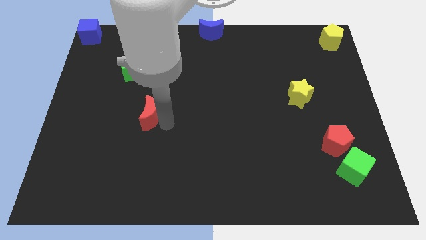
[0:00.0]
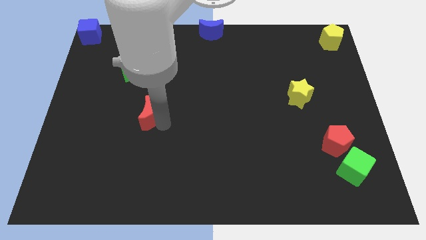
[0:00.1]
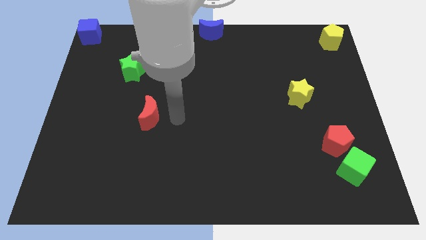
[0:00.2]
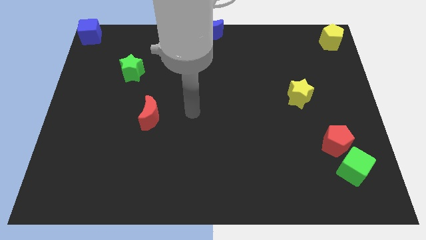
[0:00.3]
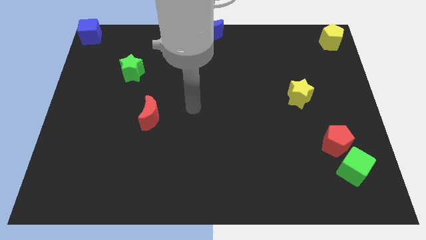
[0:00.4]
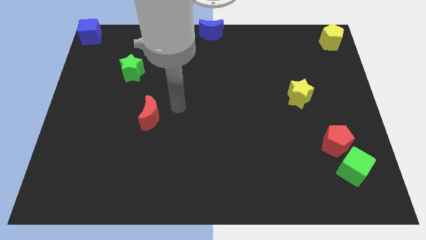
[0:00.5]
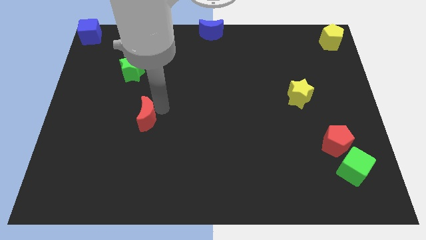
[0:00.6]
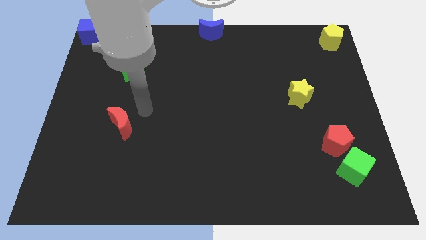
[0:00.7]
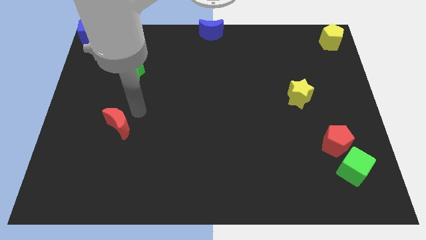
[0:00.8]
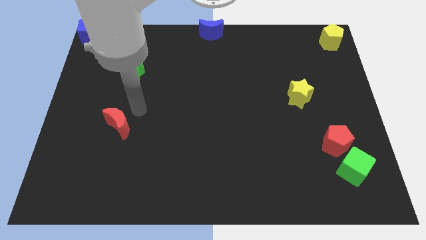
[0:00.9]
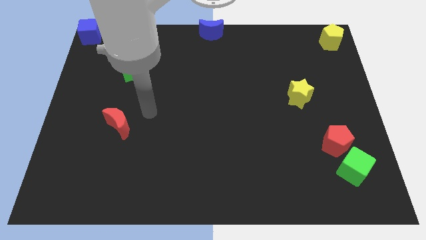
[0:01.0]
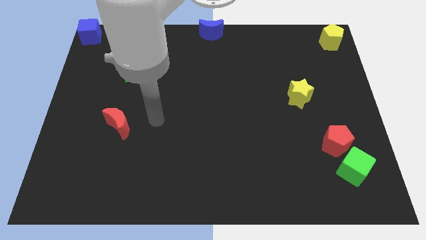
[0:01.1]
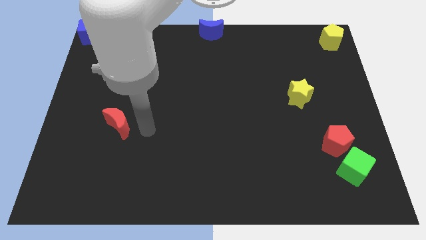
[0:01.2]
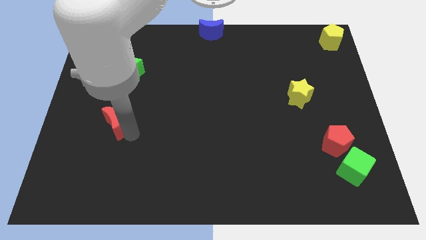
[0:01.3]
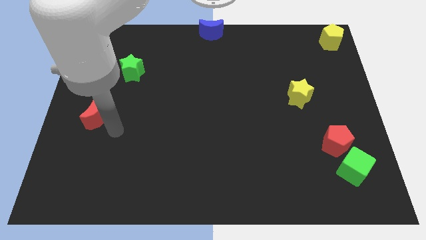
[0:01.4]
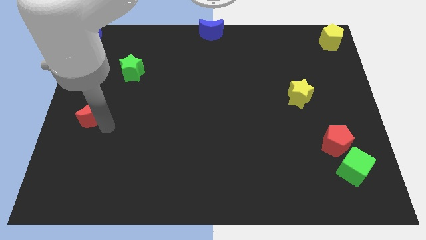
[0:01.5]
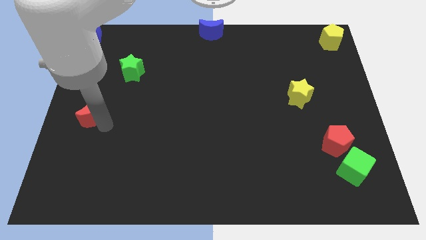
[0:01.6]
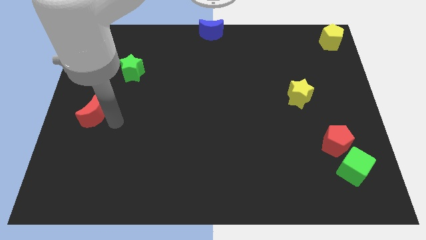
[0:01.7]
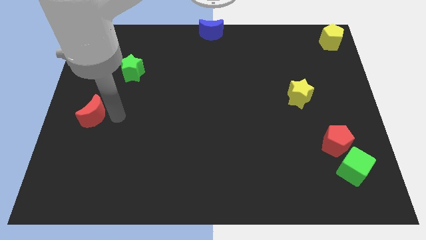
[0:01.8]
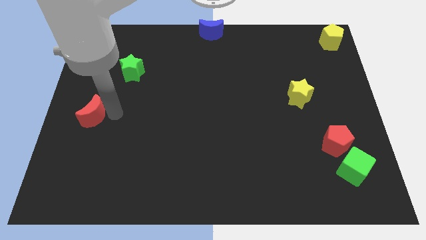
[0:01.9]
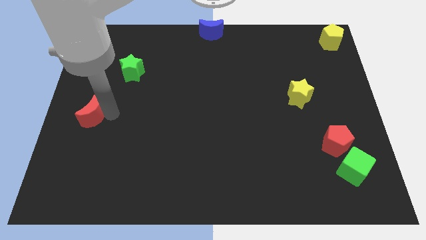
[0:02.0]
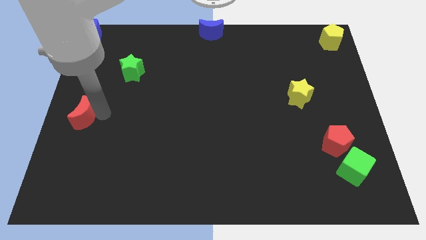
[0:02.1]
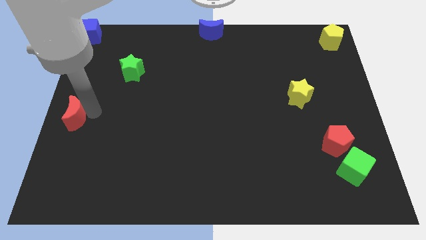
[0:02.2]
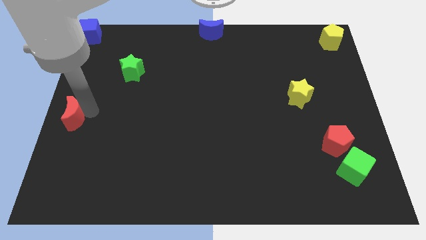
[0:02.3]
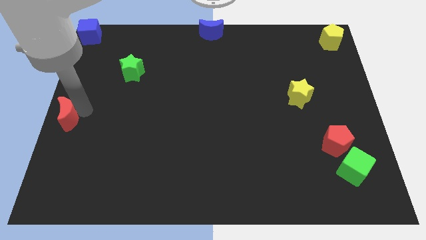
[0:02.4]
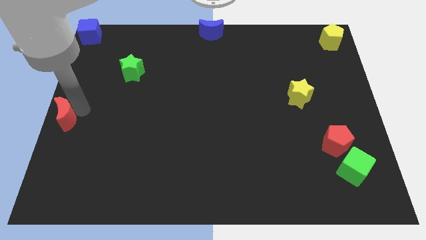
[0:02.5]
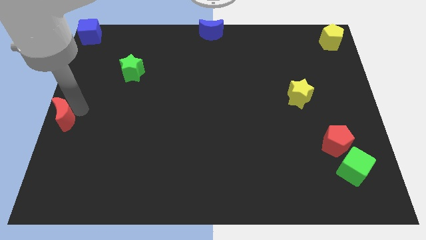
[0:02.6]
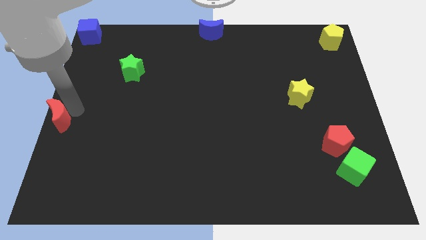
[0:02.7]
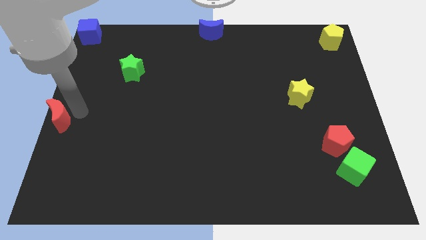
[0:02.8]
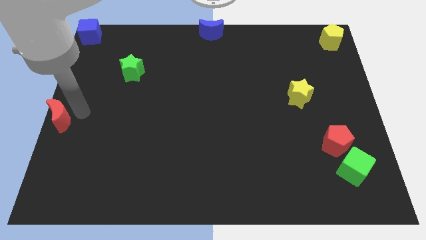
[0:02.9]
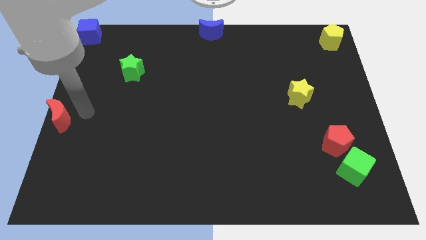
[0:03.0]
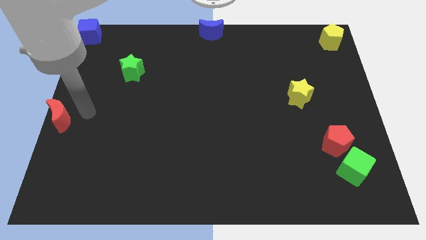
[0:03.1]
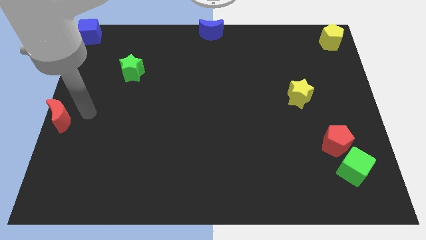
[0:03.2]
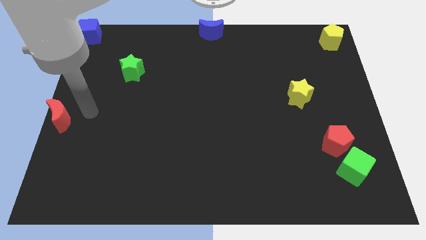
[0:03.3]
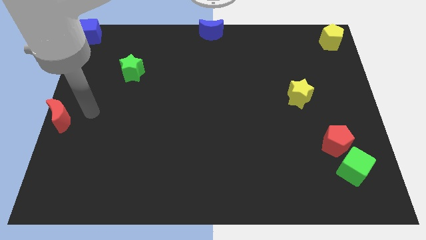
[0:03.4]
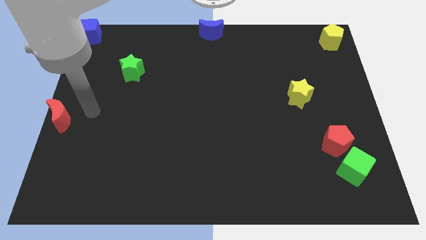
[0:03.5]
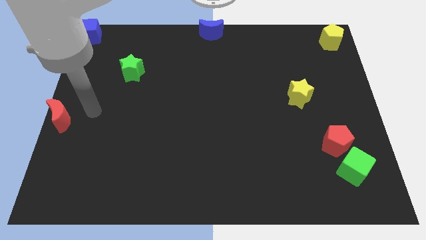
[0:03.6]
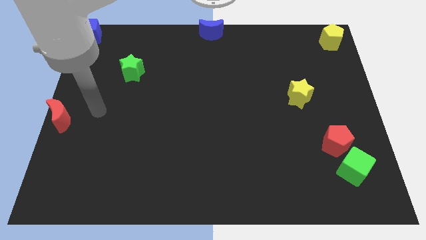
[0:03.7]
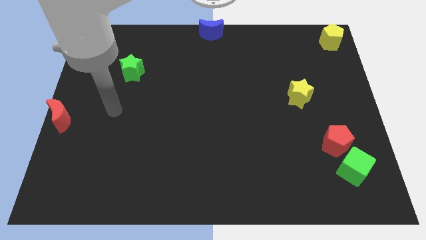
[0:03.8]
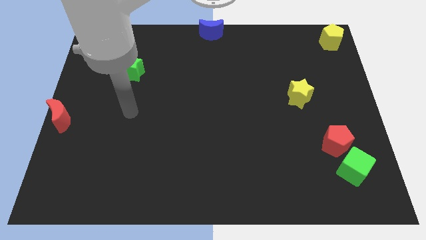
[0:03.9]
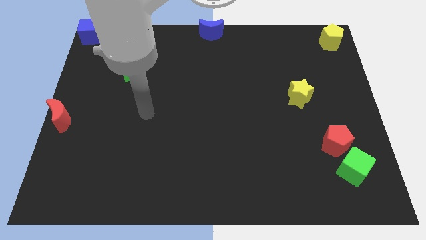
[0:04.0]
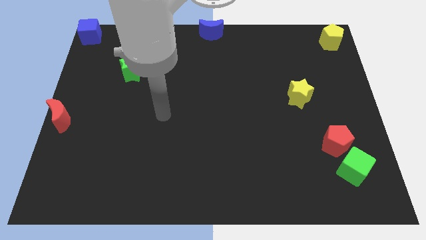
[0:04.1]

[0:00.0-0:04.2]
place the red moon below the blue cube

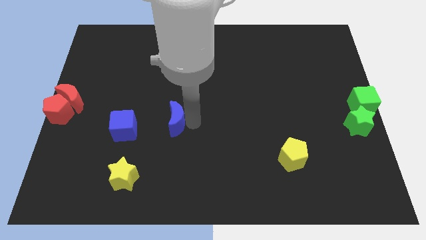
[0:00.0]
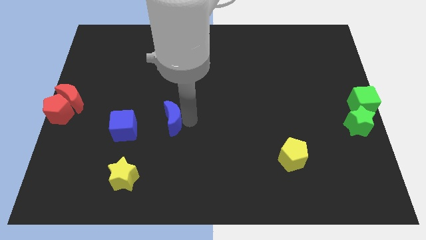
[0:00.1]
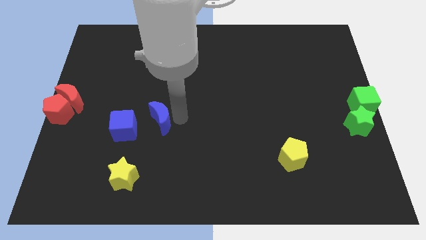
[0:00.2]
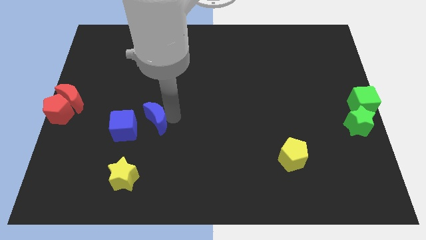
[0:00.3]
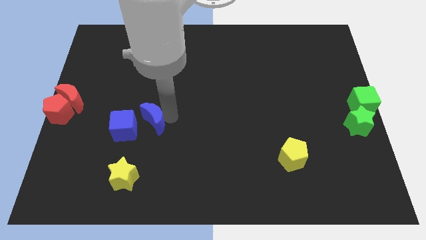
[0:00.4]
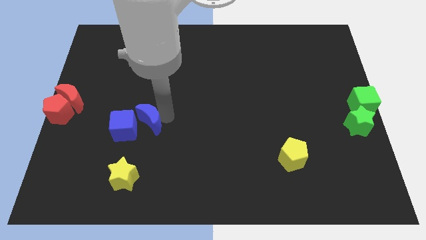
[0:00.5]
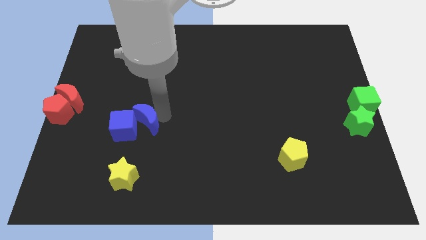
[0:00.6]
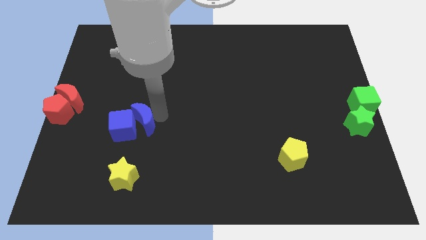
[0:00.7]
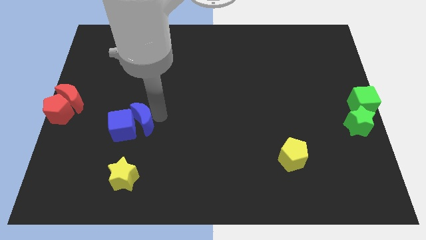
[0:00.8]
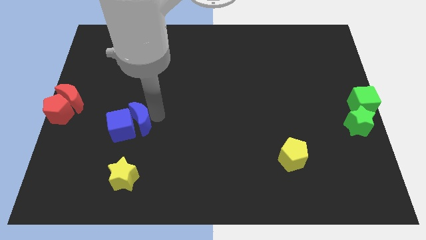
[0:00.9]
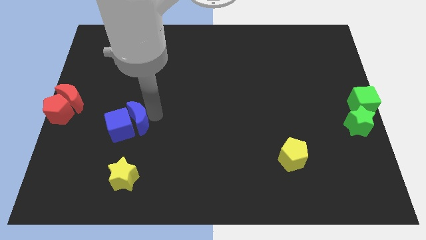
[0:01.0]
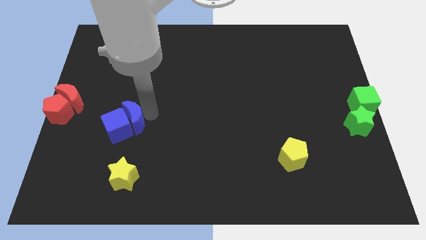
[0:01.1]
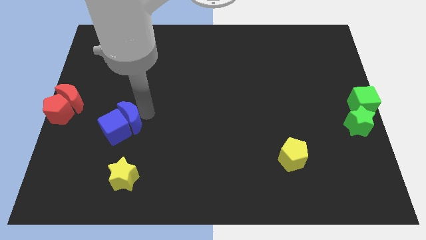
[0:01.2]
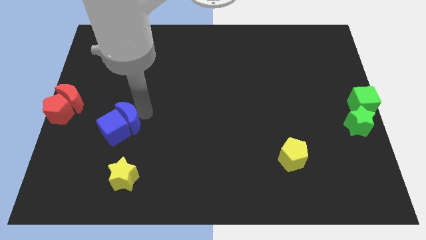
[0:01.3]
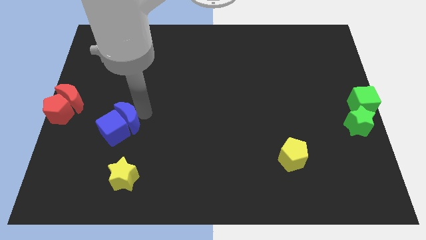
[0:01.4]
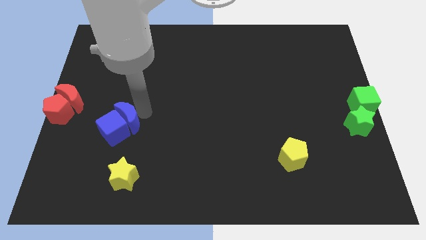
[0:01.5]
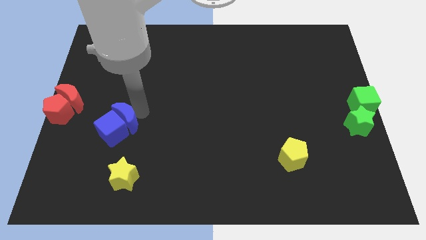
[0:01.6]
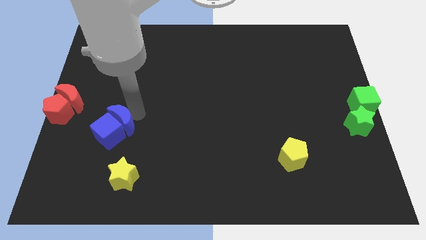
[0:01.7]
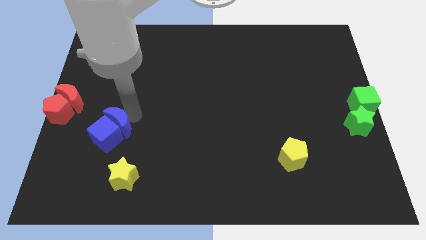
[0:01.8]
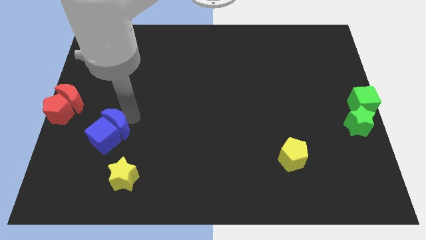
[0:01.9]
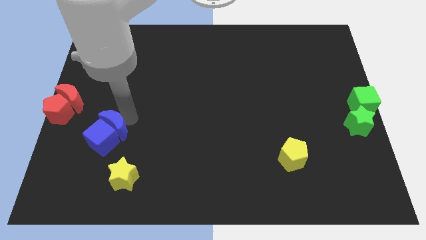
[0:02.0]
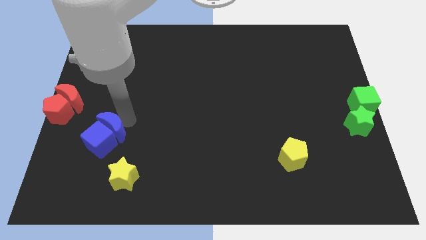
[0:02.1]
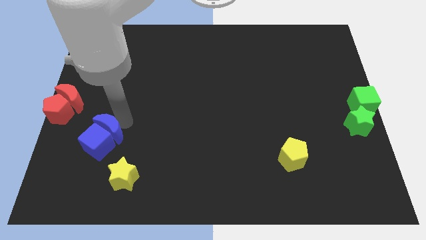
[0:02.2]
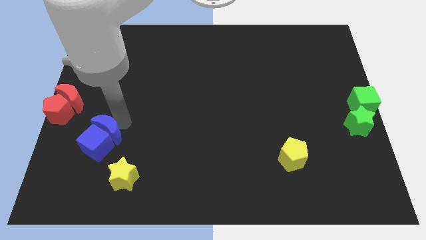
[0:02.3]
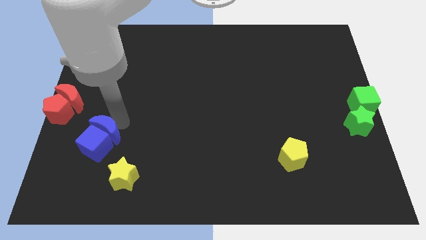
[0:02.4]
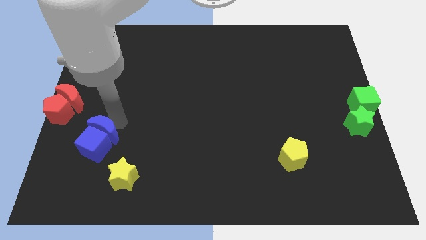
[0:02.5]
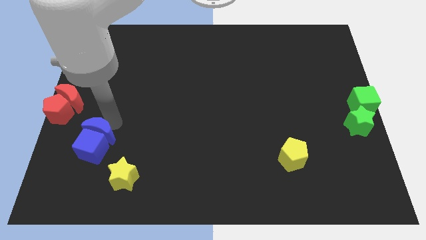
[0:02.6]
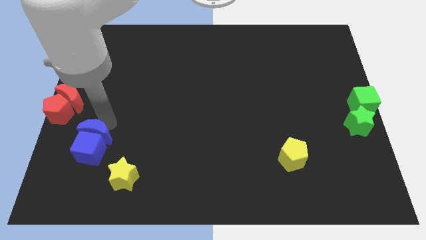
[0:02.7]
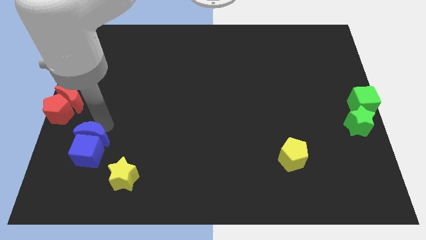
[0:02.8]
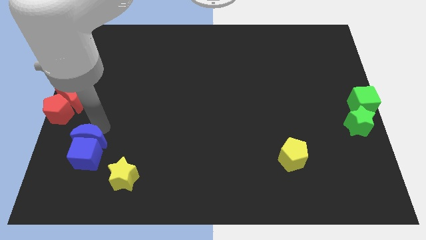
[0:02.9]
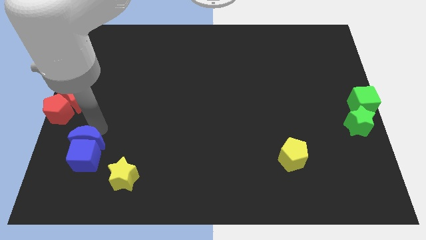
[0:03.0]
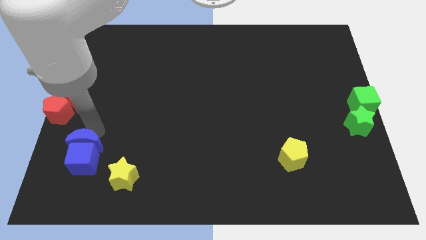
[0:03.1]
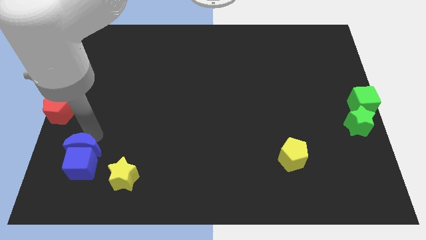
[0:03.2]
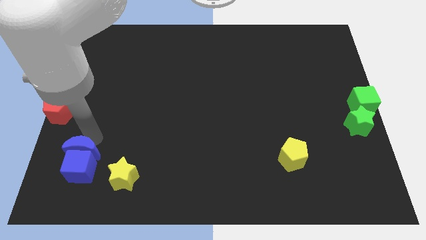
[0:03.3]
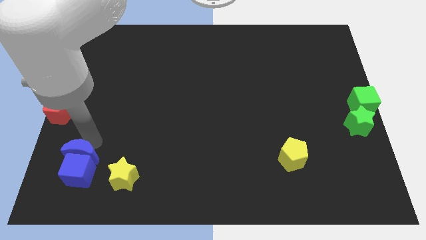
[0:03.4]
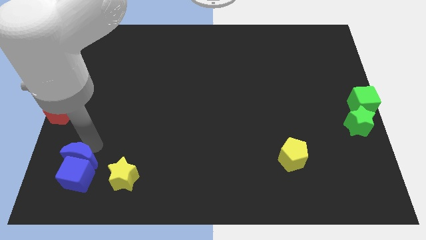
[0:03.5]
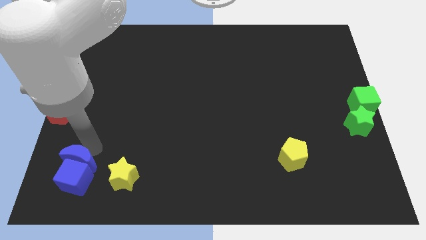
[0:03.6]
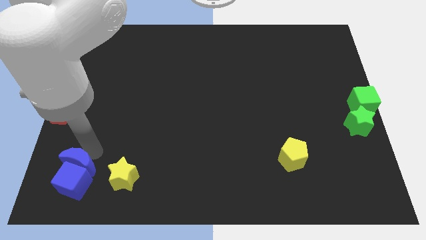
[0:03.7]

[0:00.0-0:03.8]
move the blue semicircle along with the blue cube to the left side of the yellow star

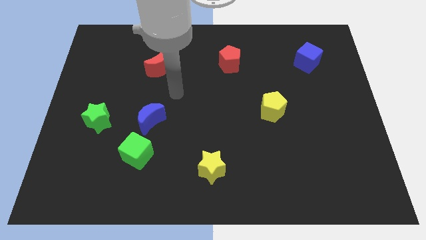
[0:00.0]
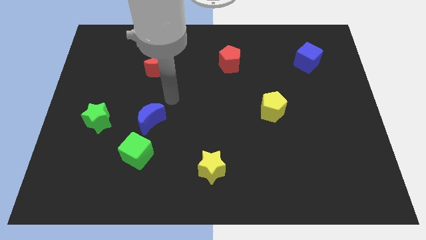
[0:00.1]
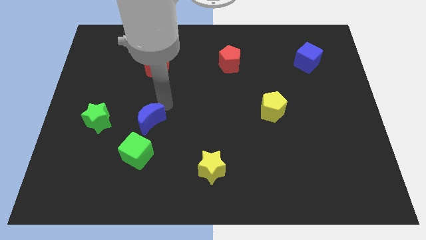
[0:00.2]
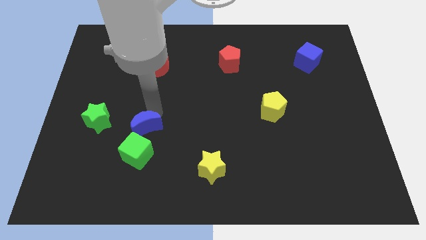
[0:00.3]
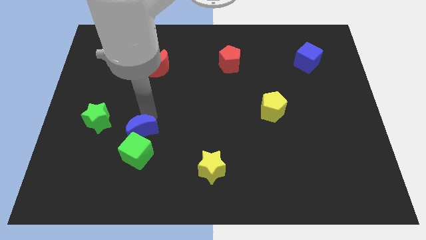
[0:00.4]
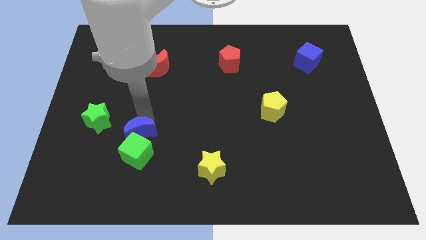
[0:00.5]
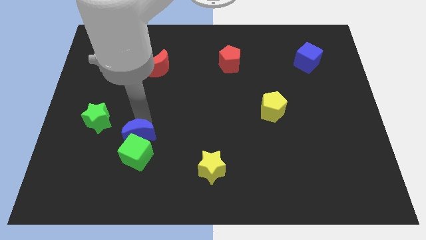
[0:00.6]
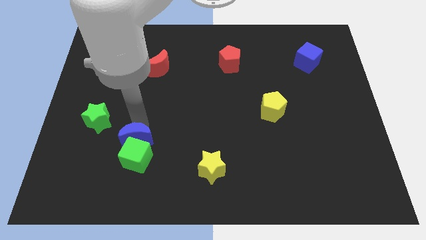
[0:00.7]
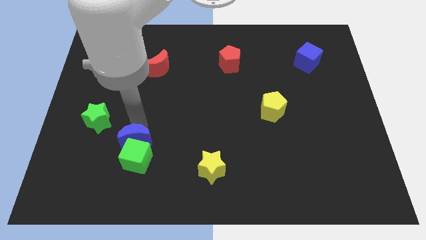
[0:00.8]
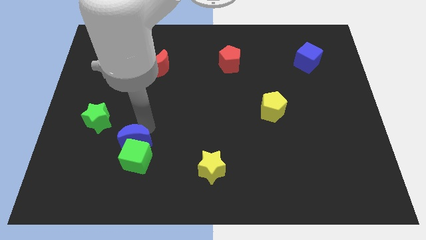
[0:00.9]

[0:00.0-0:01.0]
push the blue crescent into the green cube

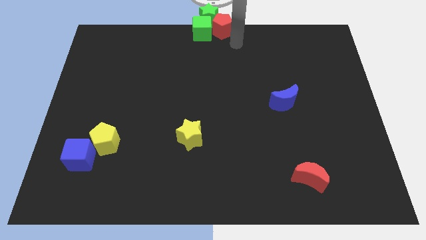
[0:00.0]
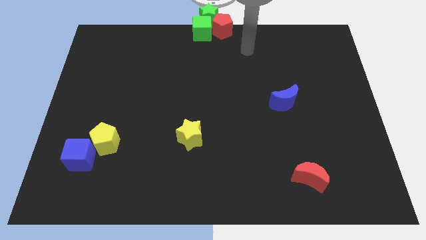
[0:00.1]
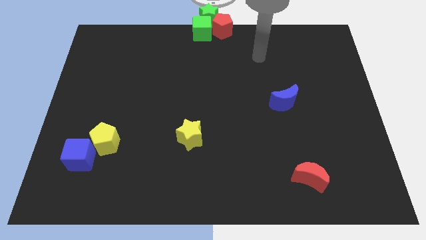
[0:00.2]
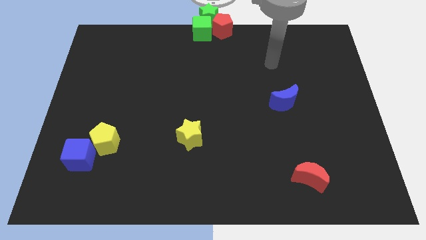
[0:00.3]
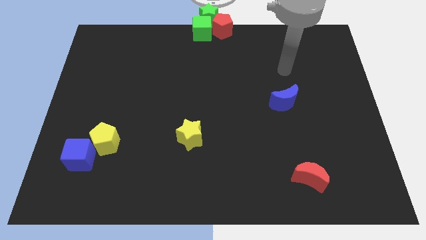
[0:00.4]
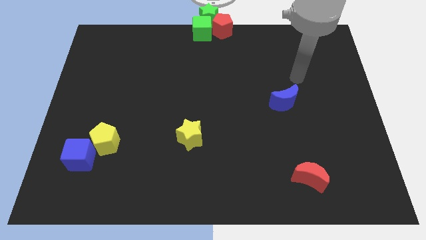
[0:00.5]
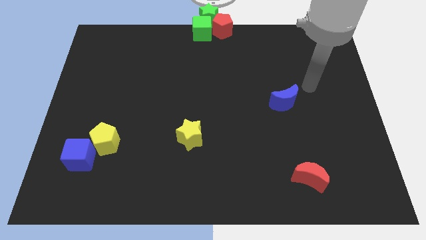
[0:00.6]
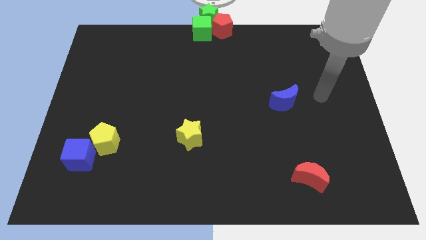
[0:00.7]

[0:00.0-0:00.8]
go and put your hand at the right side of the blue crescent
